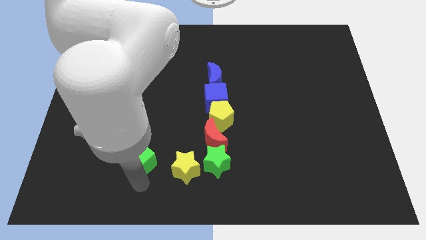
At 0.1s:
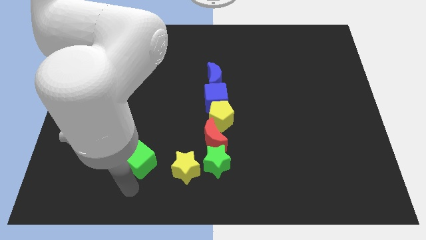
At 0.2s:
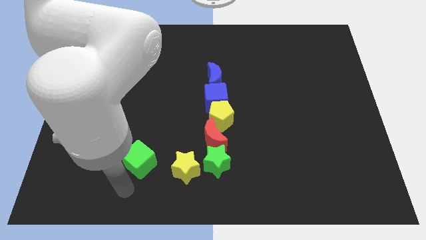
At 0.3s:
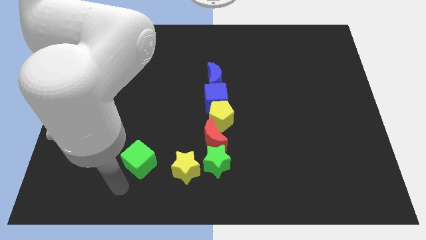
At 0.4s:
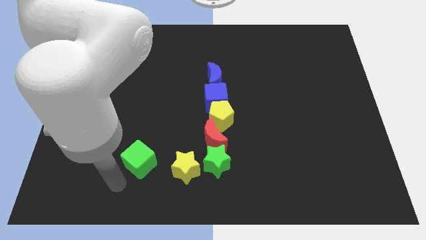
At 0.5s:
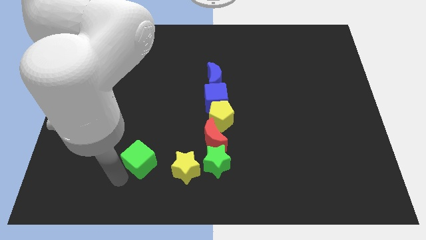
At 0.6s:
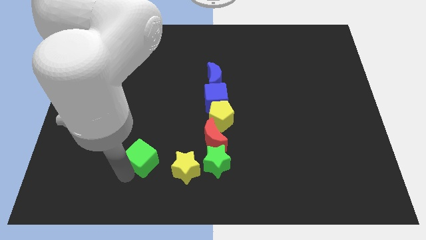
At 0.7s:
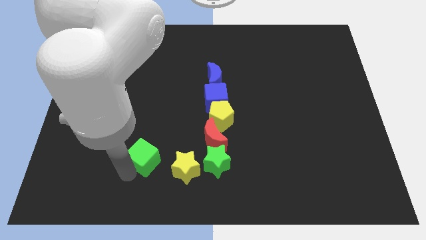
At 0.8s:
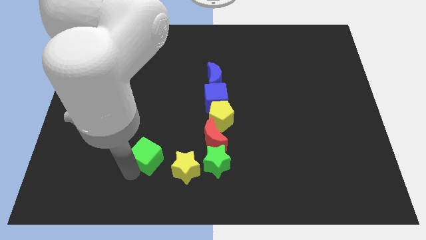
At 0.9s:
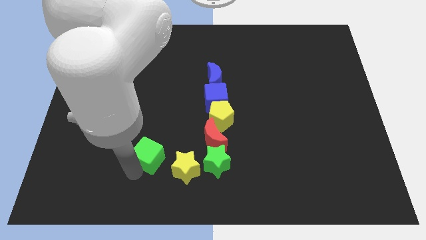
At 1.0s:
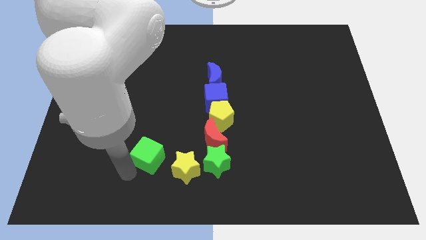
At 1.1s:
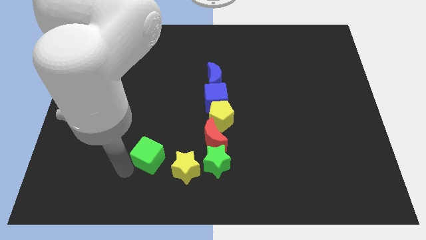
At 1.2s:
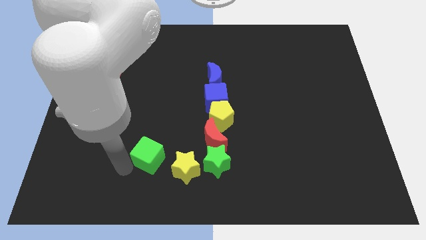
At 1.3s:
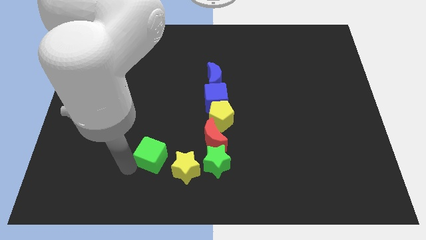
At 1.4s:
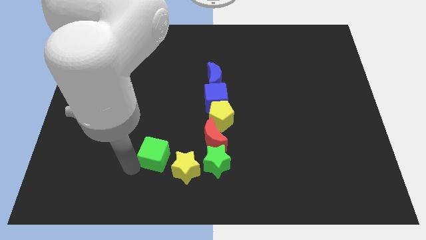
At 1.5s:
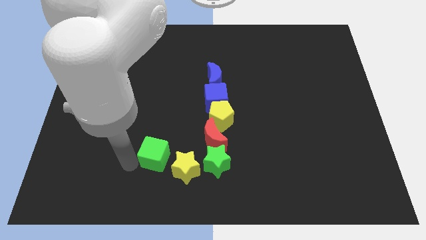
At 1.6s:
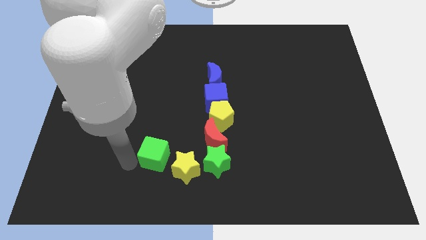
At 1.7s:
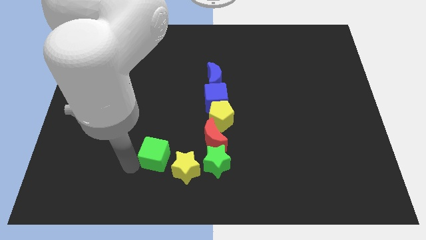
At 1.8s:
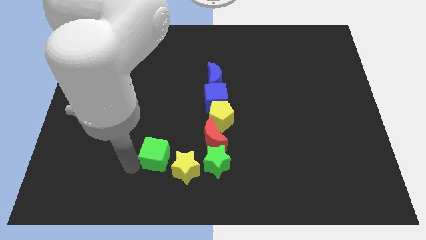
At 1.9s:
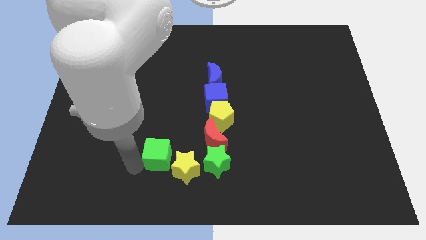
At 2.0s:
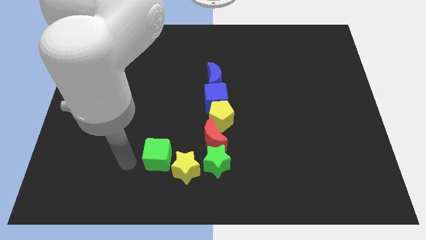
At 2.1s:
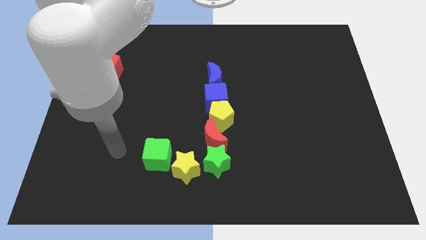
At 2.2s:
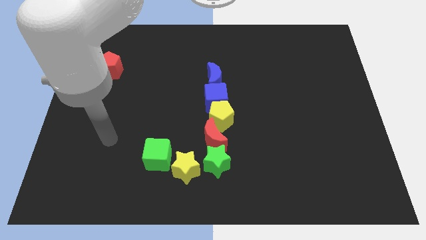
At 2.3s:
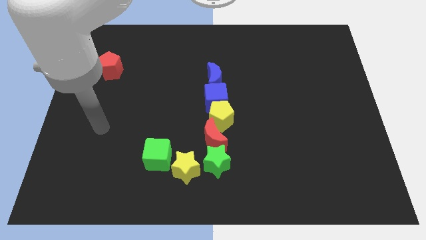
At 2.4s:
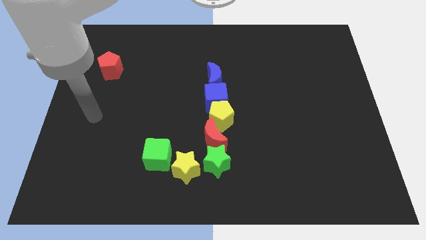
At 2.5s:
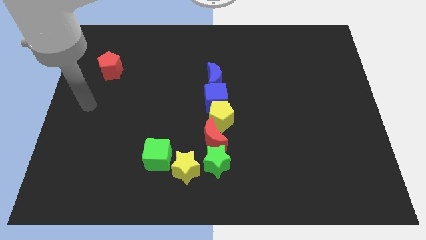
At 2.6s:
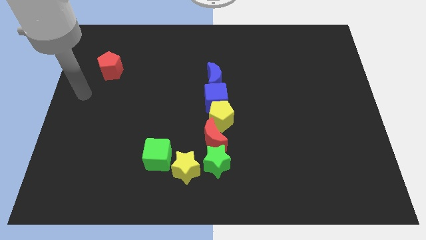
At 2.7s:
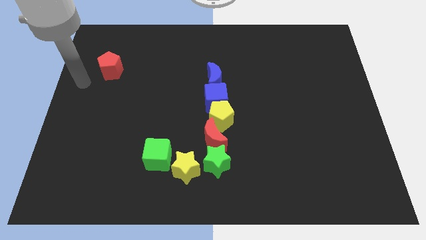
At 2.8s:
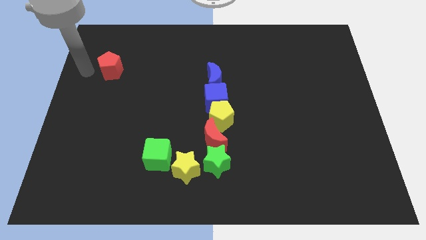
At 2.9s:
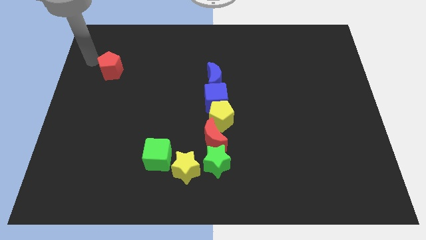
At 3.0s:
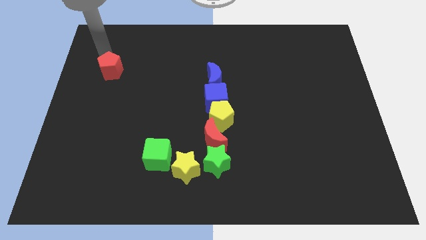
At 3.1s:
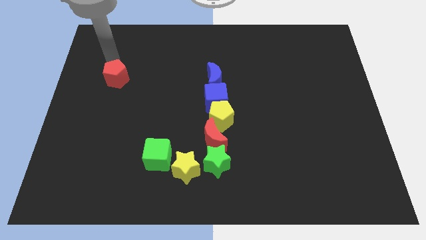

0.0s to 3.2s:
slide the green cube close to the yellow star

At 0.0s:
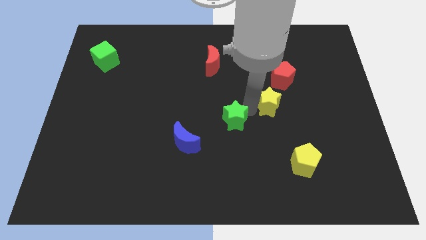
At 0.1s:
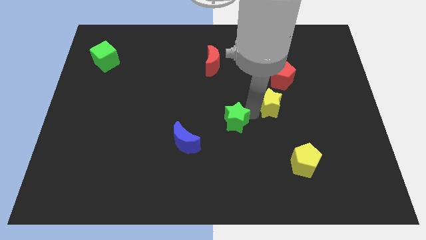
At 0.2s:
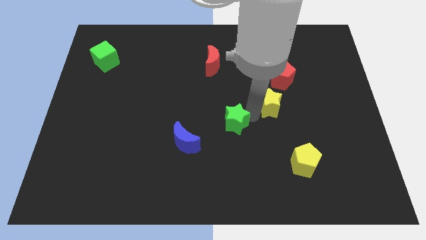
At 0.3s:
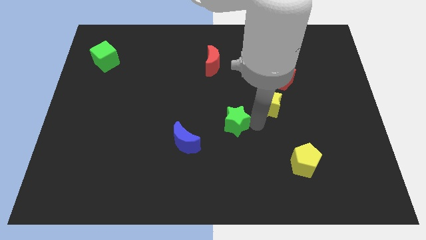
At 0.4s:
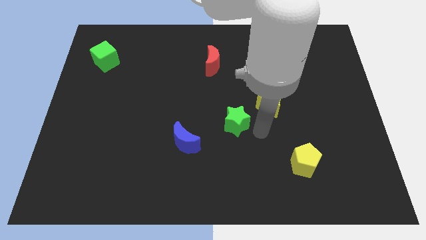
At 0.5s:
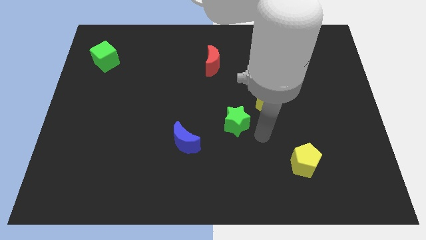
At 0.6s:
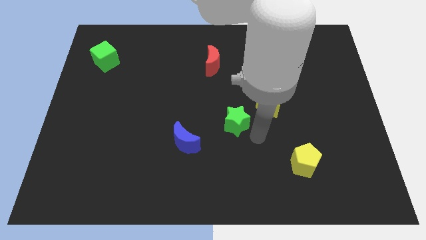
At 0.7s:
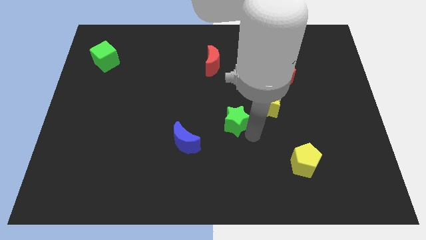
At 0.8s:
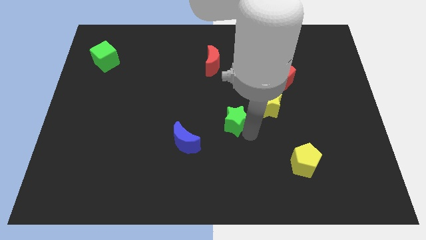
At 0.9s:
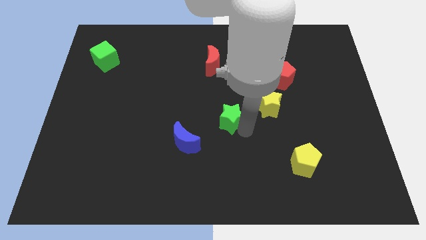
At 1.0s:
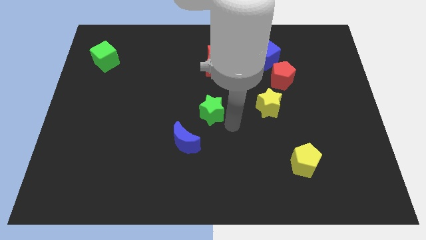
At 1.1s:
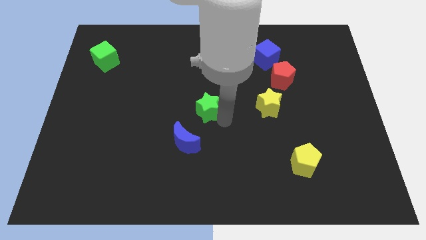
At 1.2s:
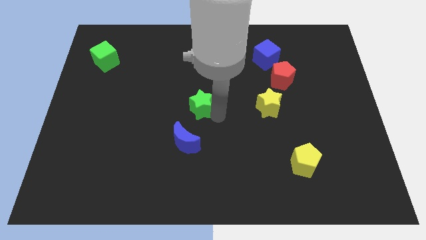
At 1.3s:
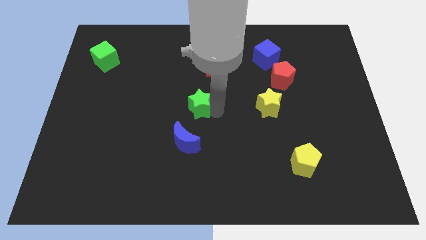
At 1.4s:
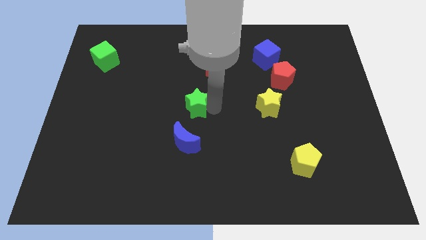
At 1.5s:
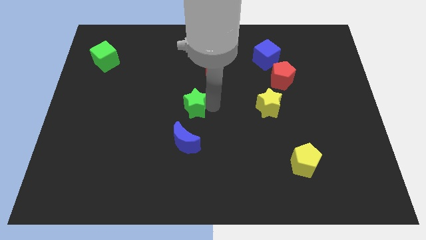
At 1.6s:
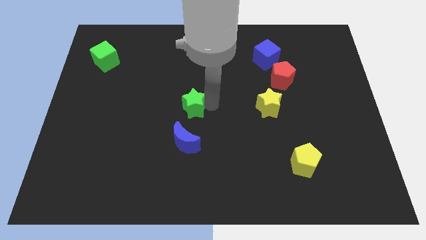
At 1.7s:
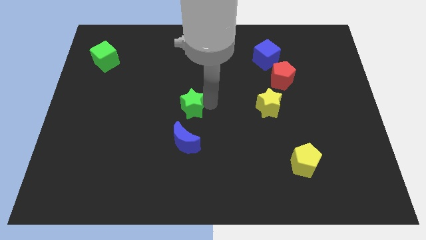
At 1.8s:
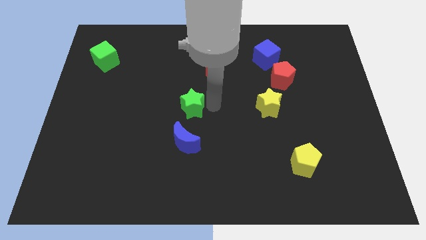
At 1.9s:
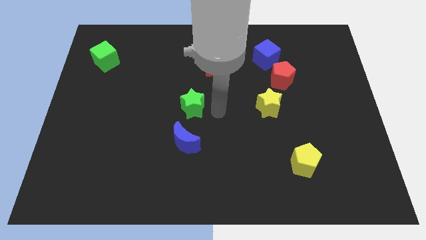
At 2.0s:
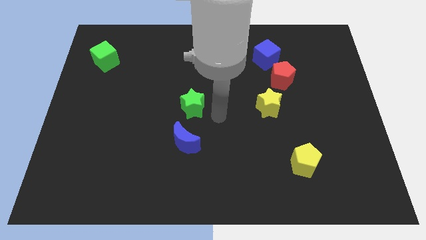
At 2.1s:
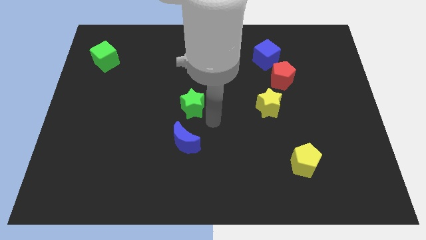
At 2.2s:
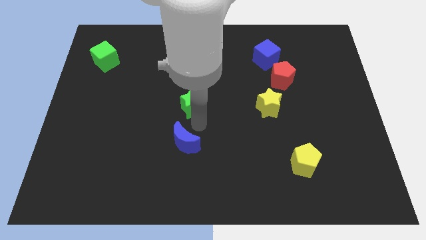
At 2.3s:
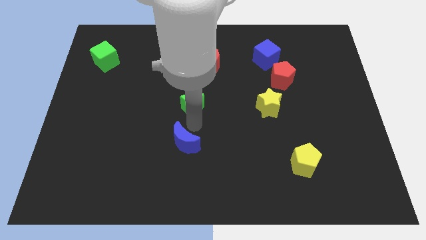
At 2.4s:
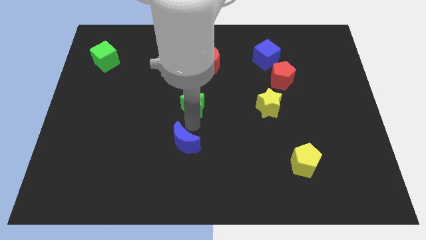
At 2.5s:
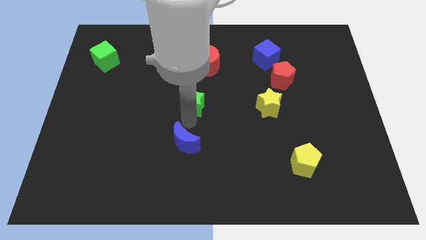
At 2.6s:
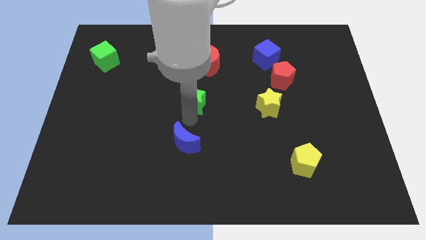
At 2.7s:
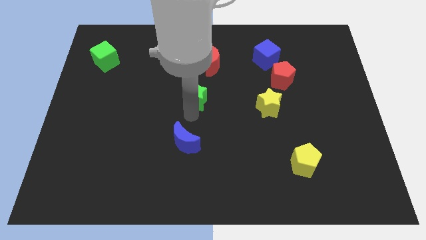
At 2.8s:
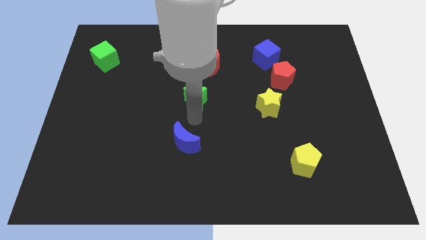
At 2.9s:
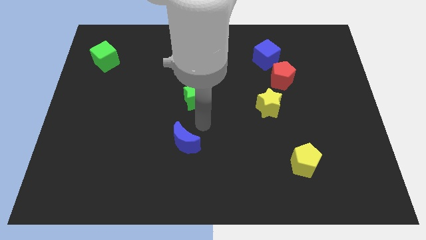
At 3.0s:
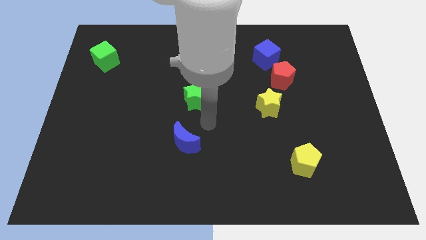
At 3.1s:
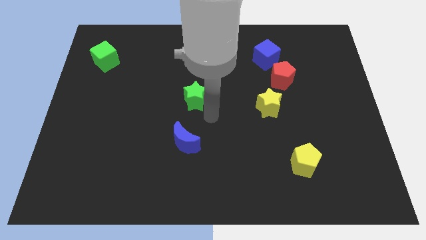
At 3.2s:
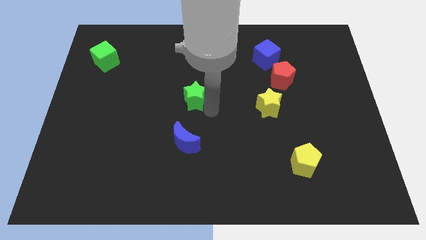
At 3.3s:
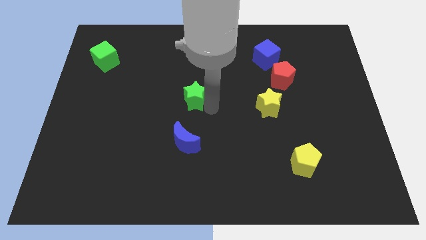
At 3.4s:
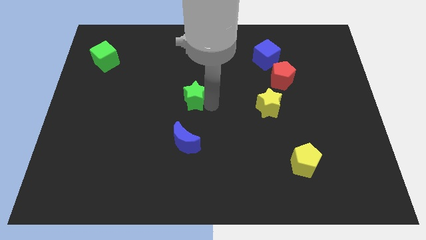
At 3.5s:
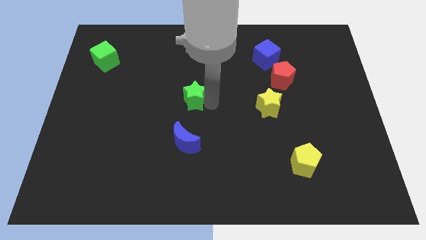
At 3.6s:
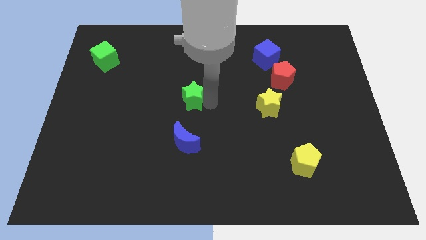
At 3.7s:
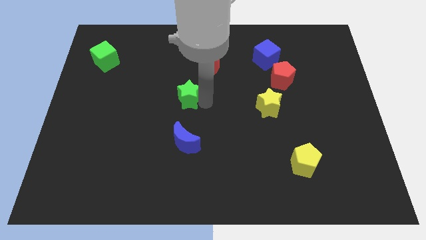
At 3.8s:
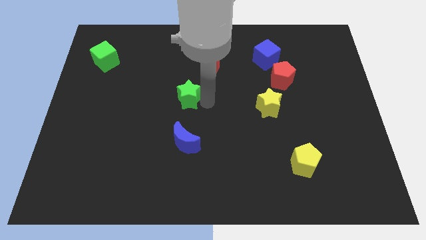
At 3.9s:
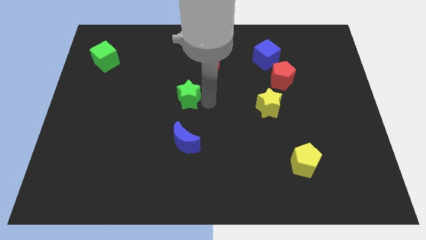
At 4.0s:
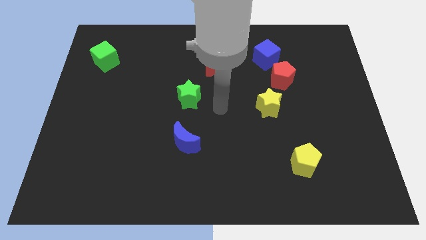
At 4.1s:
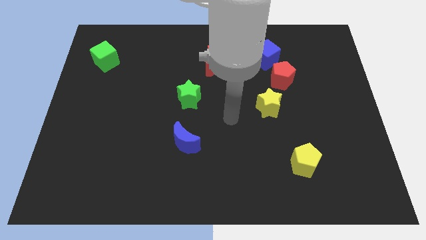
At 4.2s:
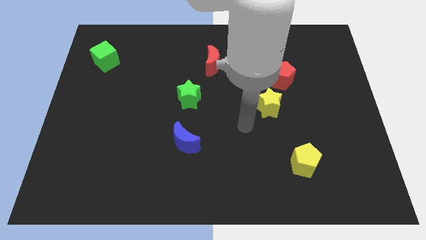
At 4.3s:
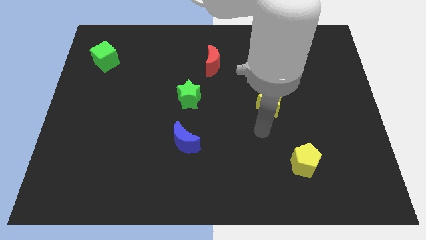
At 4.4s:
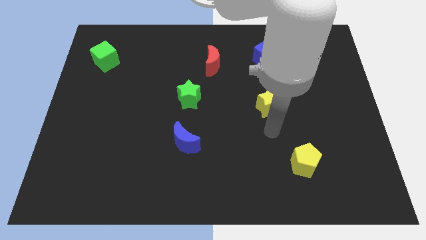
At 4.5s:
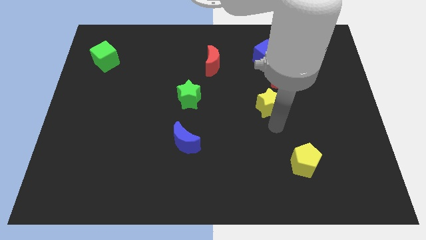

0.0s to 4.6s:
place the green star below the red moon

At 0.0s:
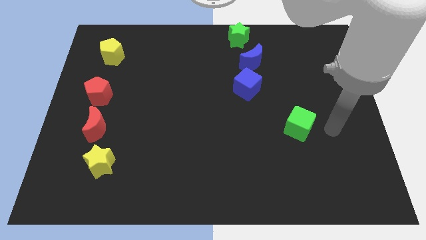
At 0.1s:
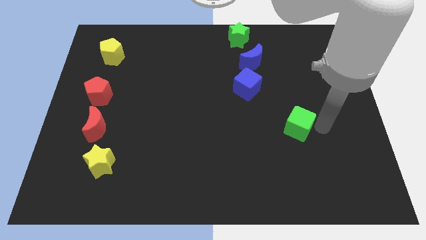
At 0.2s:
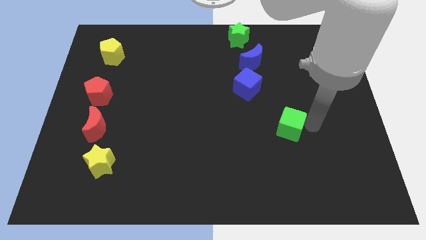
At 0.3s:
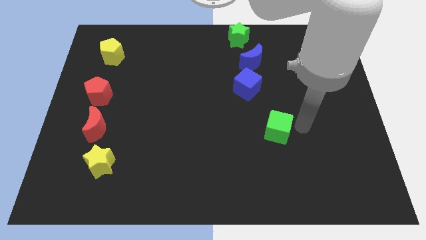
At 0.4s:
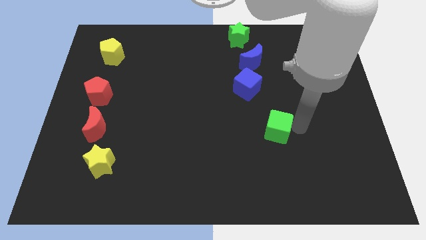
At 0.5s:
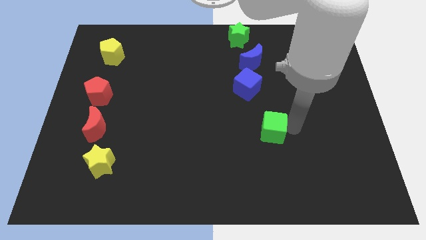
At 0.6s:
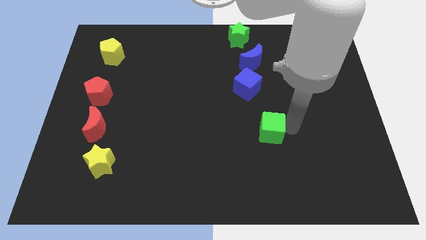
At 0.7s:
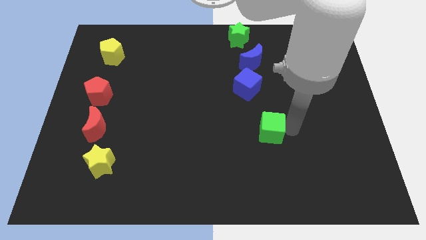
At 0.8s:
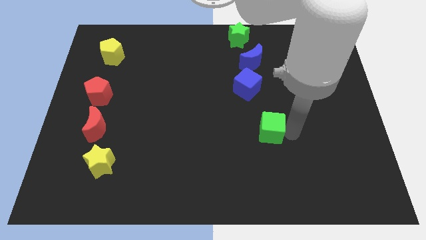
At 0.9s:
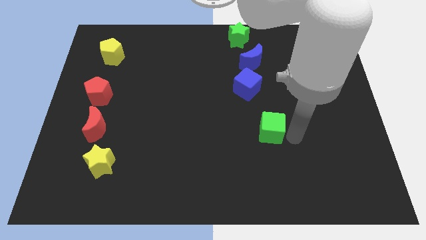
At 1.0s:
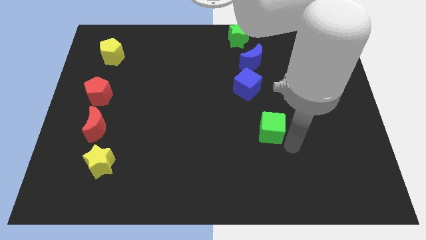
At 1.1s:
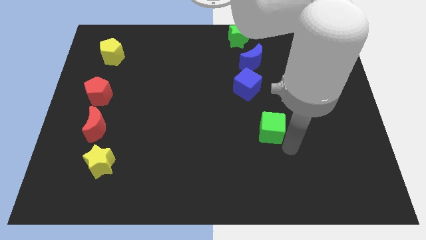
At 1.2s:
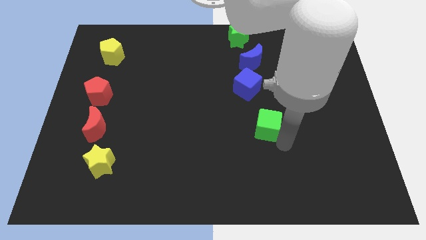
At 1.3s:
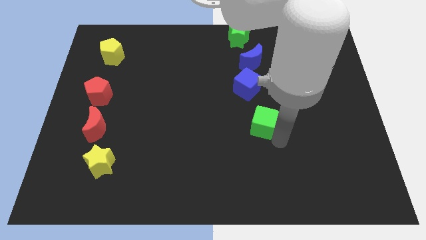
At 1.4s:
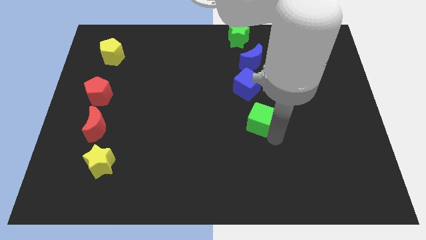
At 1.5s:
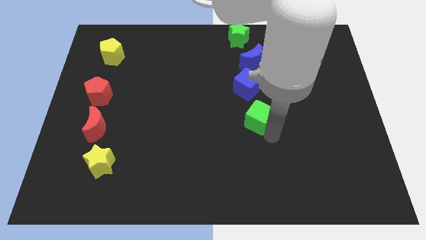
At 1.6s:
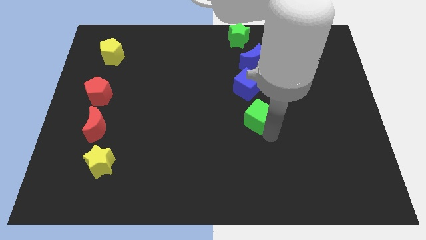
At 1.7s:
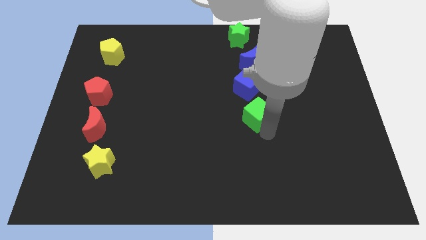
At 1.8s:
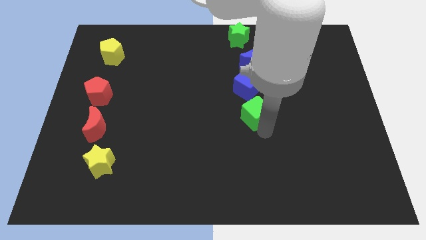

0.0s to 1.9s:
put the green cube at the bottom of blue cube
